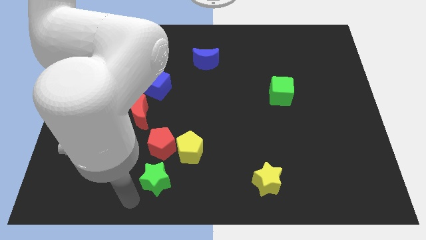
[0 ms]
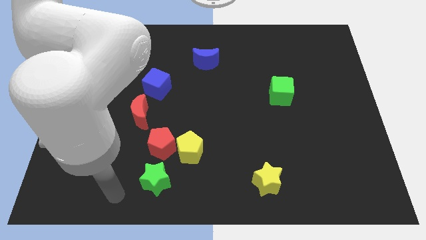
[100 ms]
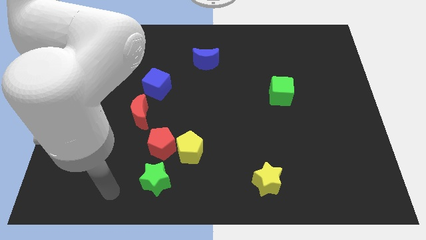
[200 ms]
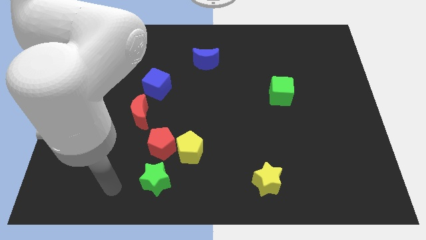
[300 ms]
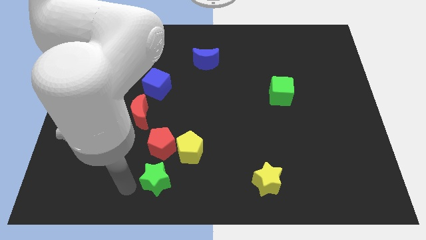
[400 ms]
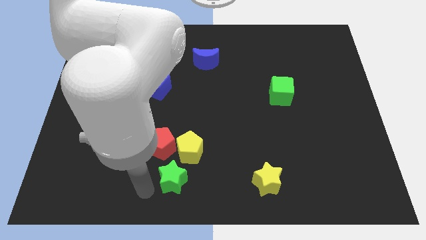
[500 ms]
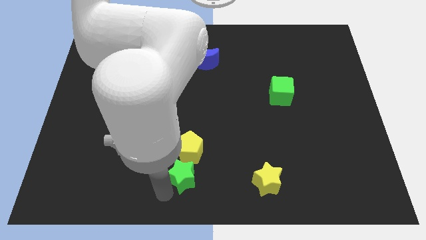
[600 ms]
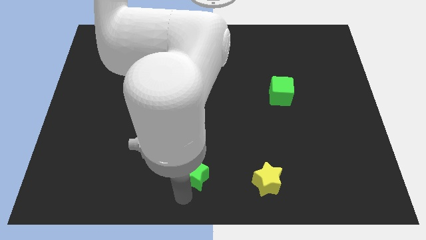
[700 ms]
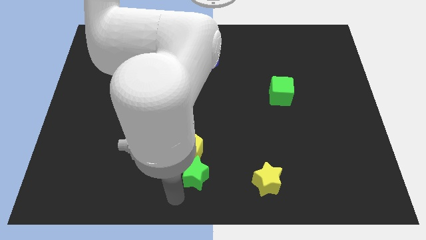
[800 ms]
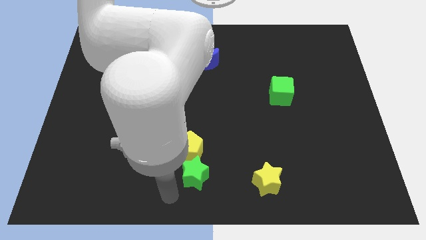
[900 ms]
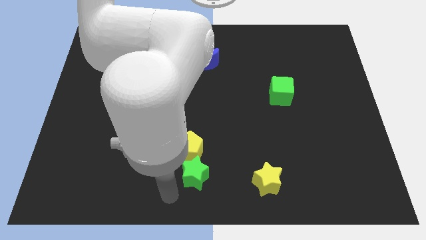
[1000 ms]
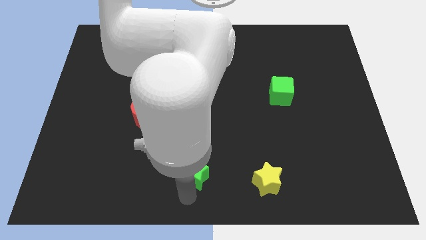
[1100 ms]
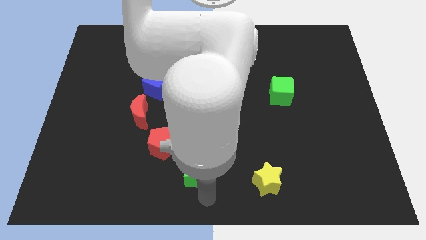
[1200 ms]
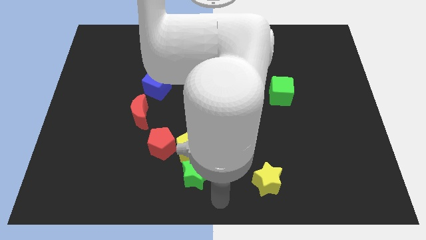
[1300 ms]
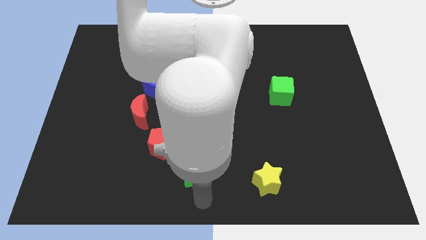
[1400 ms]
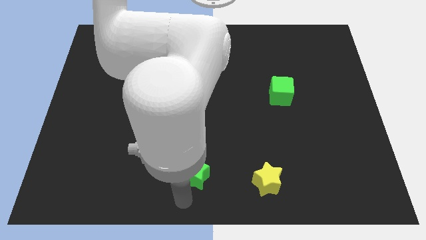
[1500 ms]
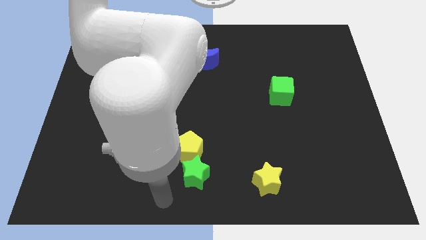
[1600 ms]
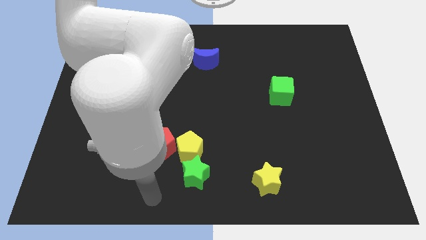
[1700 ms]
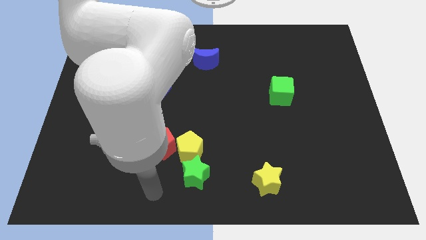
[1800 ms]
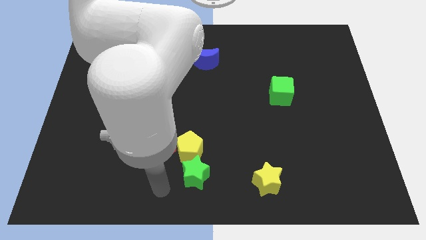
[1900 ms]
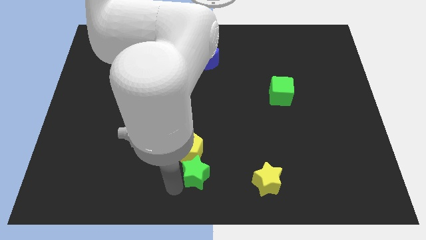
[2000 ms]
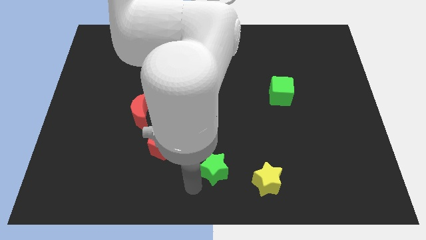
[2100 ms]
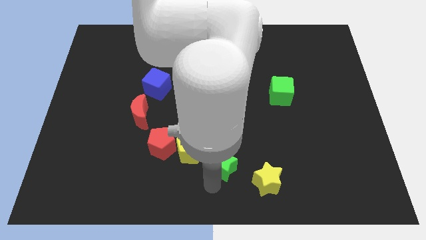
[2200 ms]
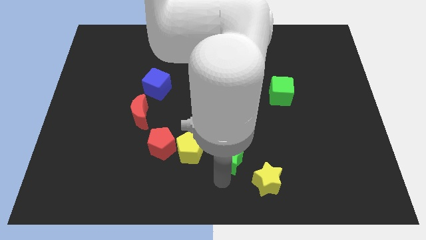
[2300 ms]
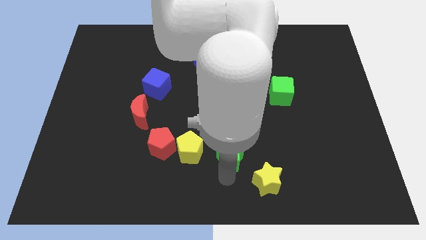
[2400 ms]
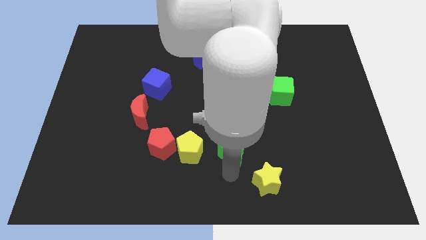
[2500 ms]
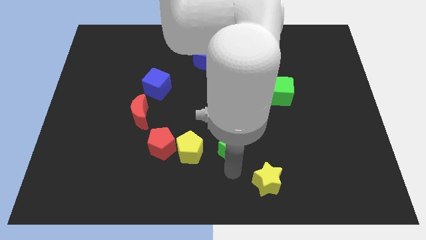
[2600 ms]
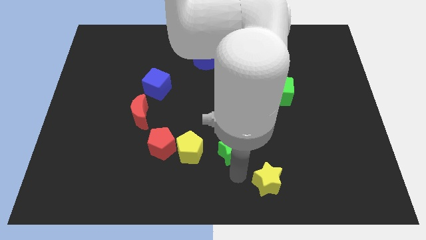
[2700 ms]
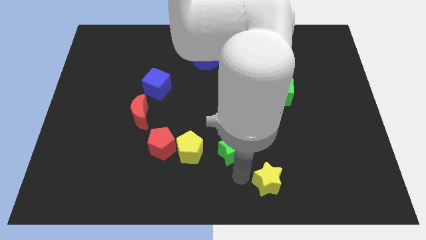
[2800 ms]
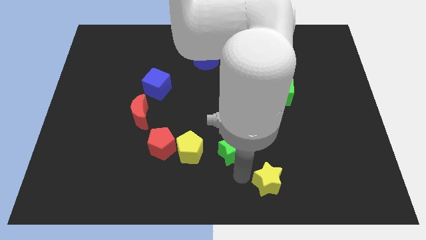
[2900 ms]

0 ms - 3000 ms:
place the green star parallel to the yellow pentagon

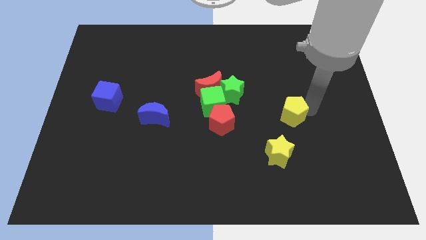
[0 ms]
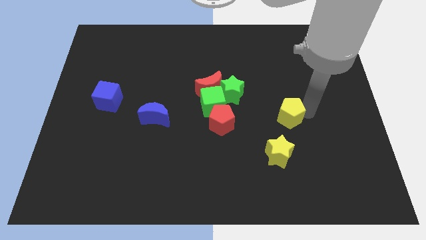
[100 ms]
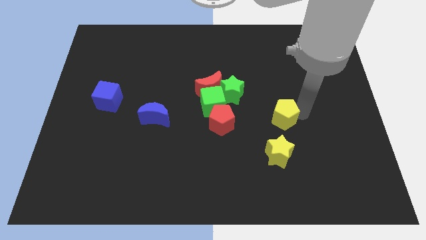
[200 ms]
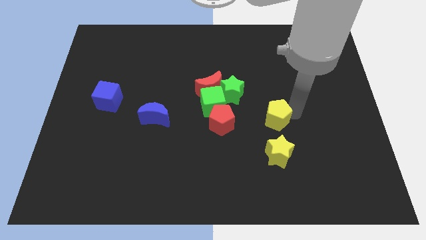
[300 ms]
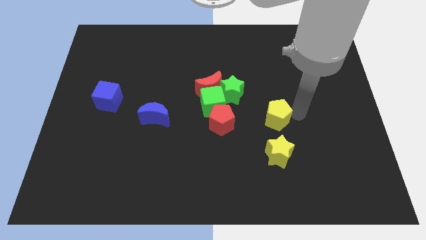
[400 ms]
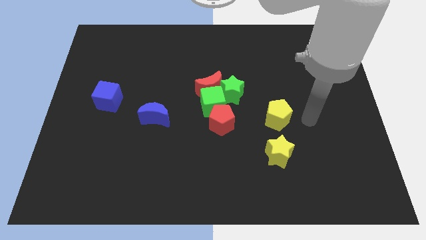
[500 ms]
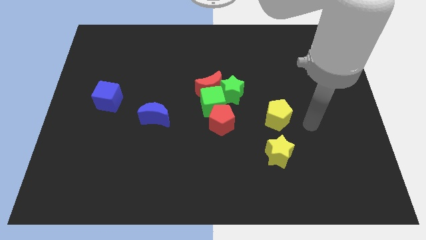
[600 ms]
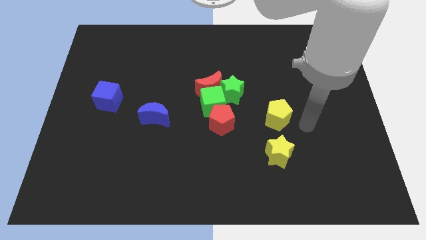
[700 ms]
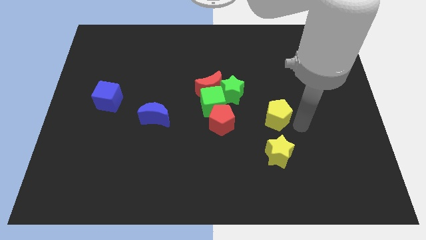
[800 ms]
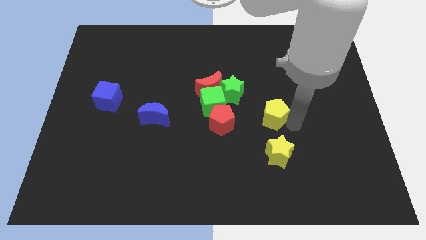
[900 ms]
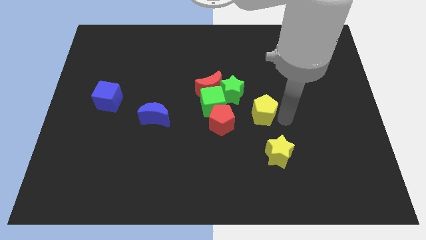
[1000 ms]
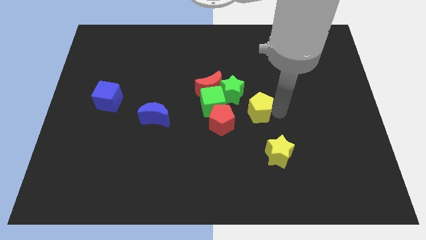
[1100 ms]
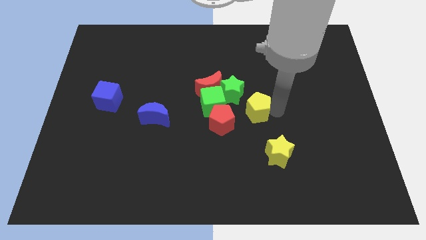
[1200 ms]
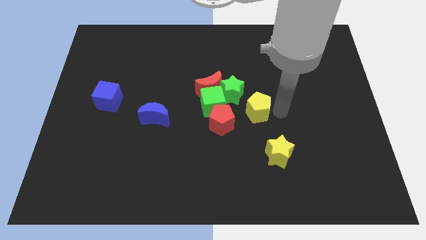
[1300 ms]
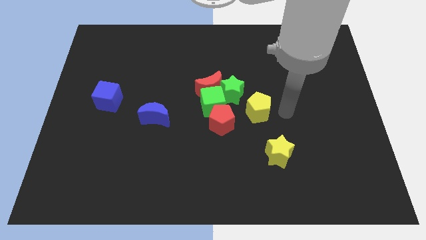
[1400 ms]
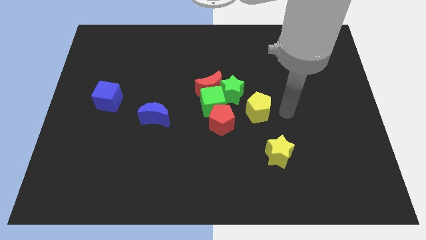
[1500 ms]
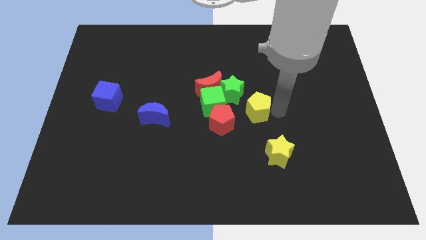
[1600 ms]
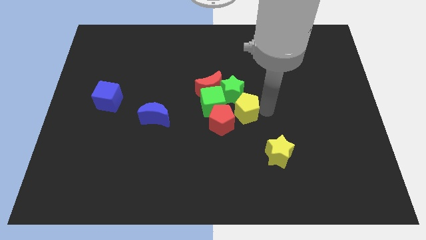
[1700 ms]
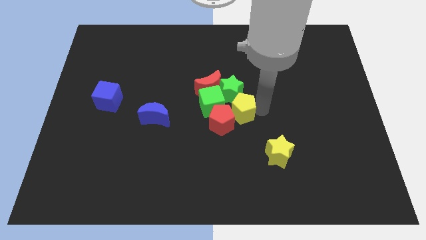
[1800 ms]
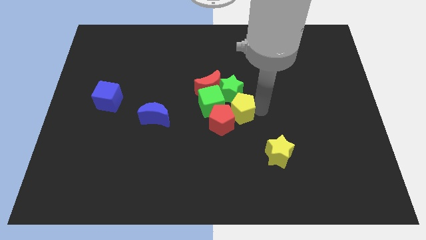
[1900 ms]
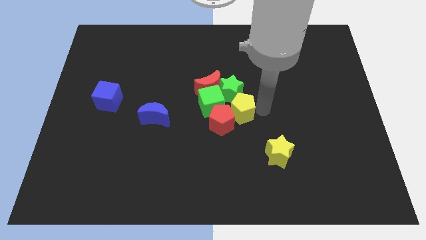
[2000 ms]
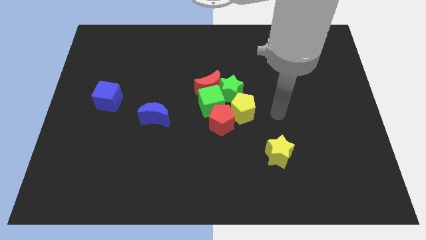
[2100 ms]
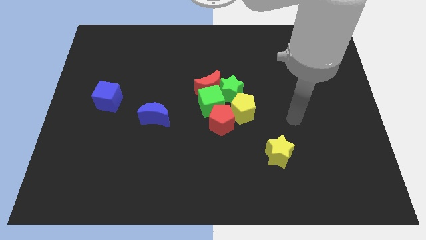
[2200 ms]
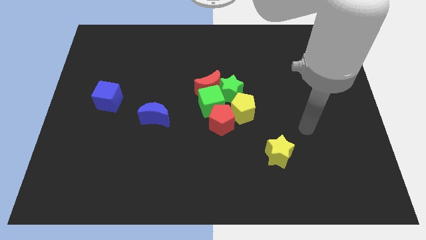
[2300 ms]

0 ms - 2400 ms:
place the yellow pentagon to the right side of red pentagon

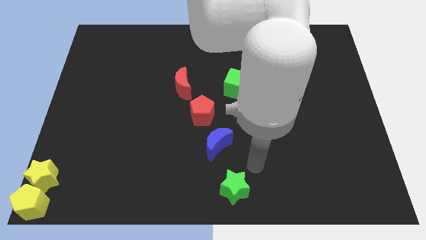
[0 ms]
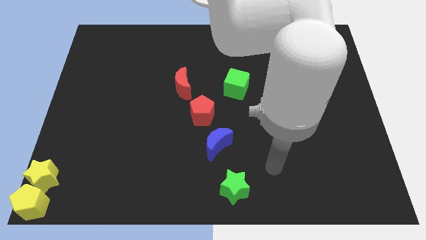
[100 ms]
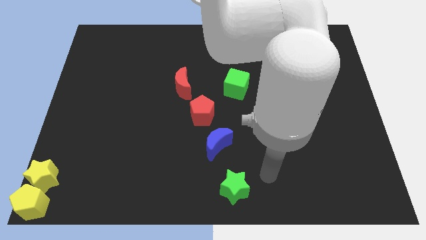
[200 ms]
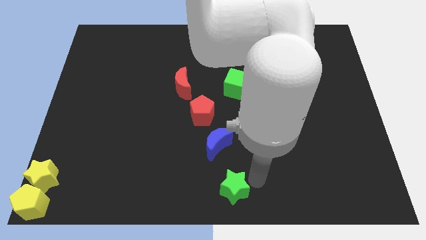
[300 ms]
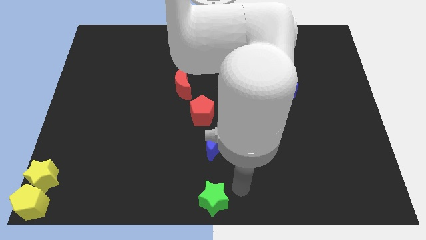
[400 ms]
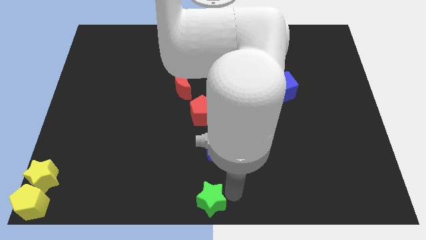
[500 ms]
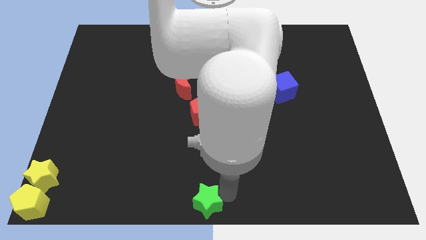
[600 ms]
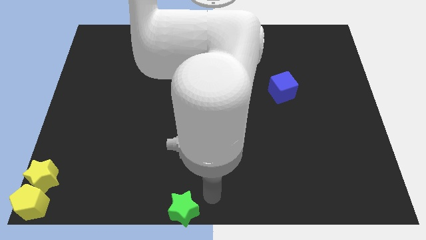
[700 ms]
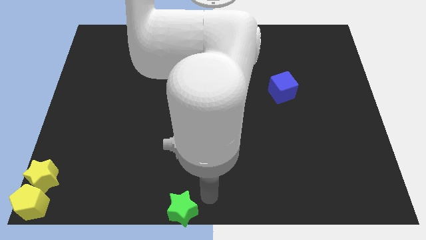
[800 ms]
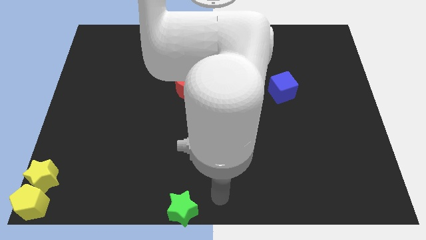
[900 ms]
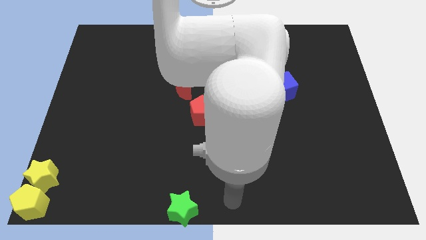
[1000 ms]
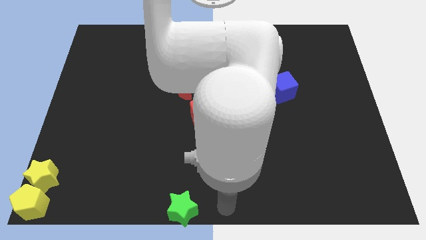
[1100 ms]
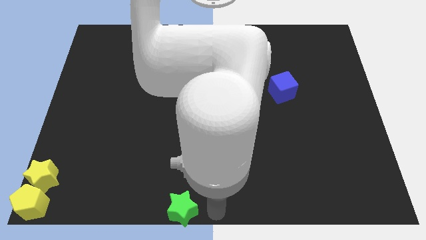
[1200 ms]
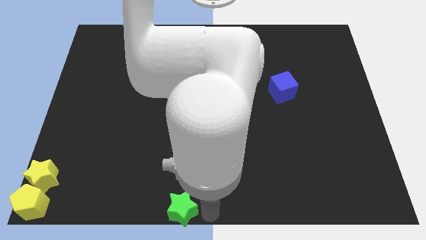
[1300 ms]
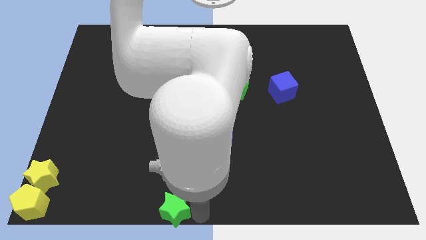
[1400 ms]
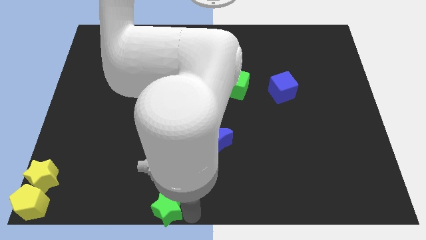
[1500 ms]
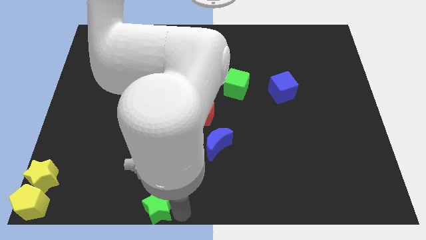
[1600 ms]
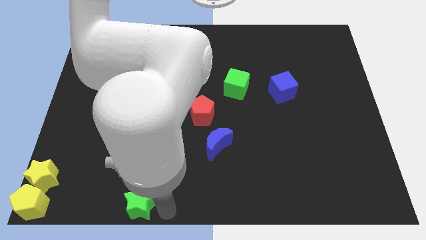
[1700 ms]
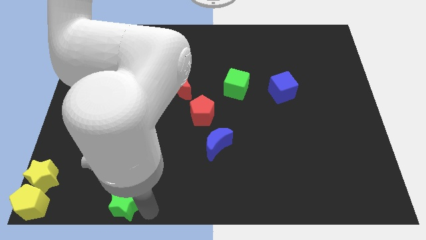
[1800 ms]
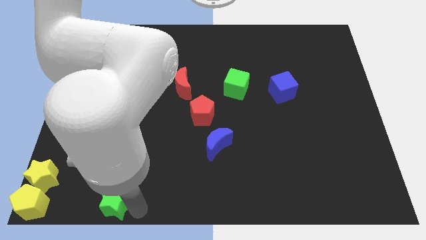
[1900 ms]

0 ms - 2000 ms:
move green star to the bottom left of the board

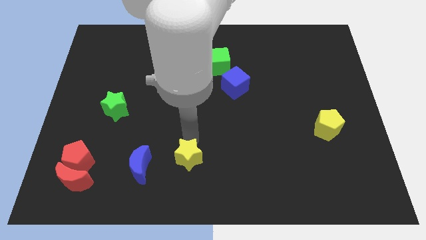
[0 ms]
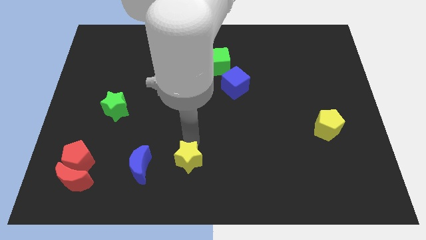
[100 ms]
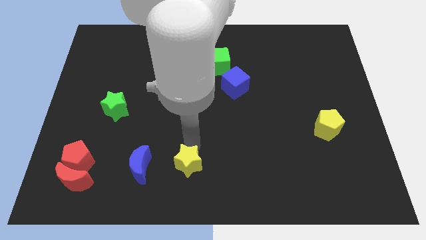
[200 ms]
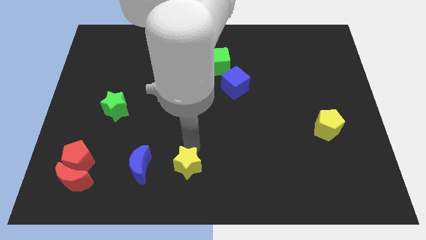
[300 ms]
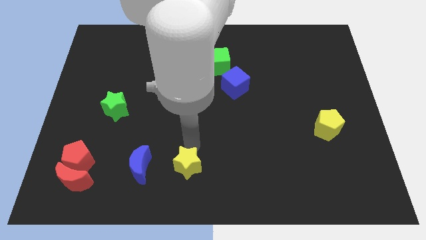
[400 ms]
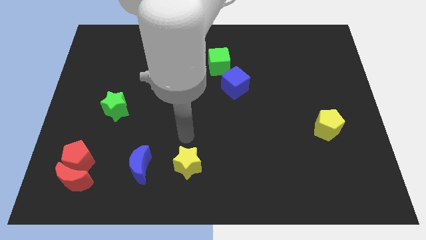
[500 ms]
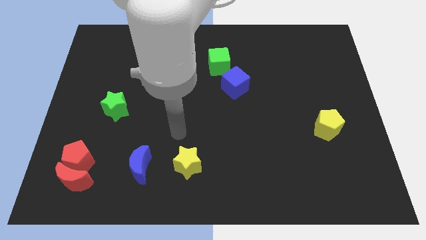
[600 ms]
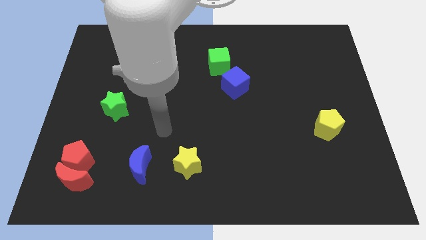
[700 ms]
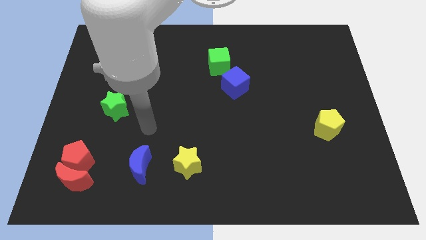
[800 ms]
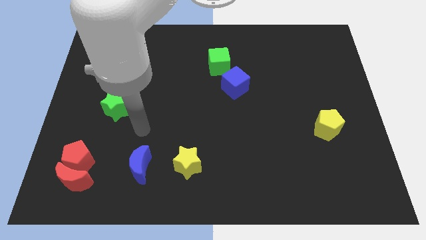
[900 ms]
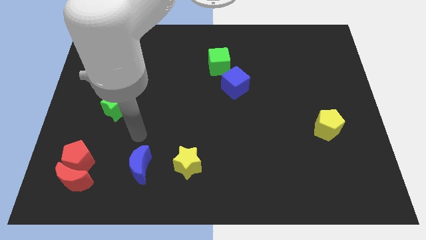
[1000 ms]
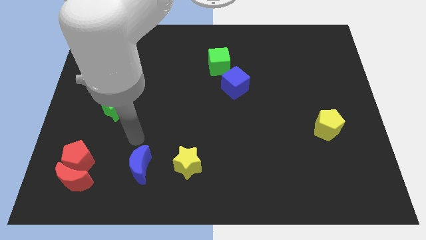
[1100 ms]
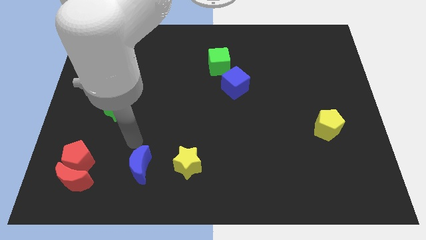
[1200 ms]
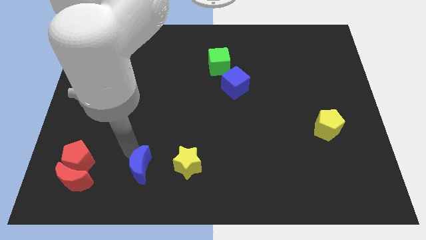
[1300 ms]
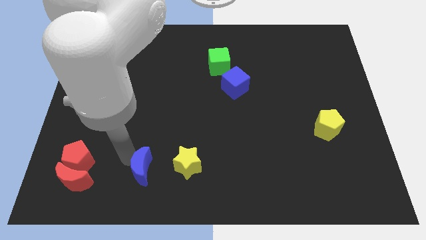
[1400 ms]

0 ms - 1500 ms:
place the yellow star to the right of the blue moon

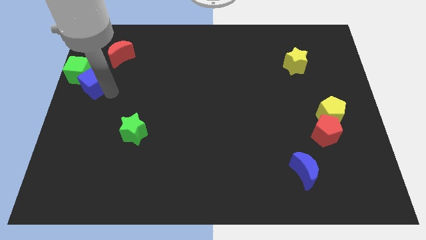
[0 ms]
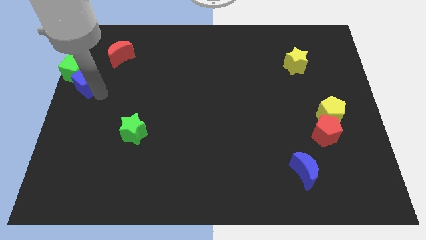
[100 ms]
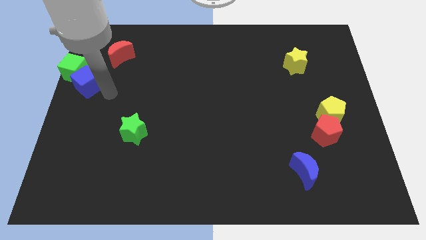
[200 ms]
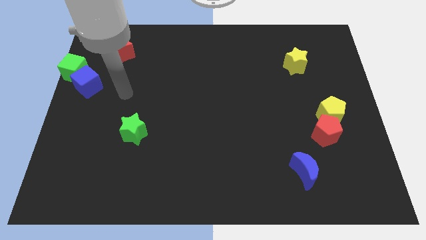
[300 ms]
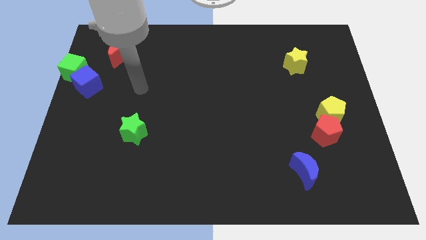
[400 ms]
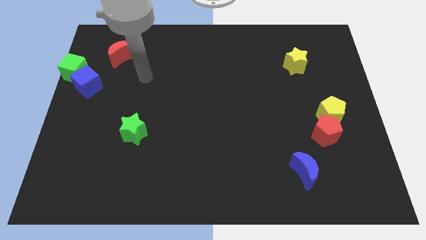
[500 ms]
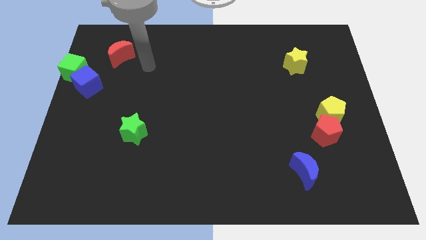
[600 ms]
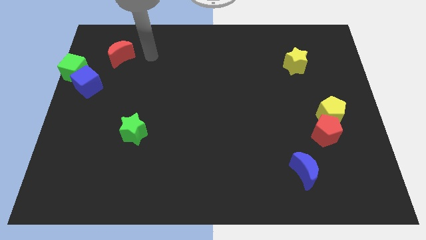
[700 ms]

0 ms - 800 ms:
move the arm away from the blue cube
